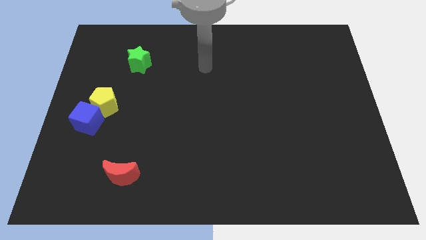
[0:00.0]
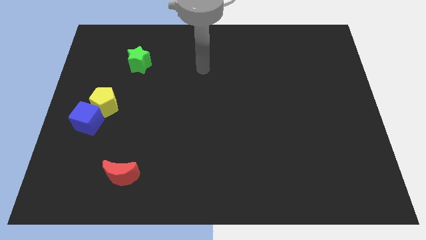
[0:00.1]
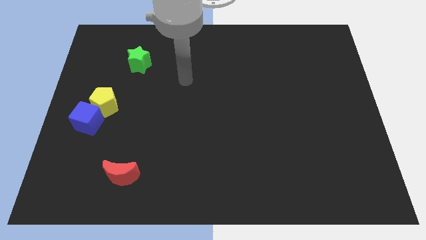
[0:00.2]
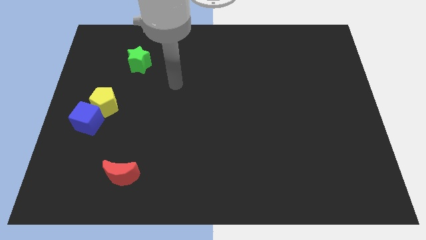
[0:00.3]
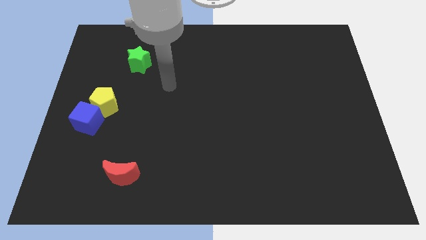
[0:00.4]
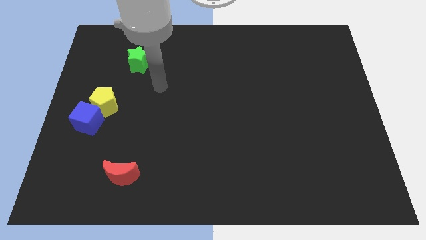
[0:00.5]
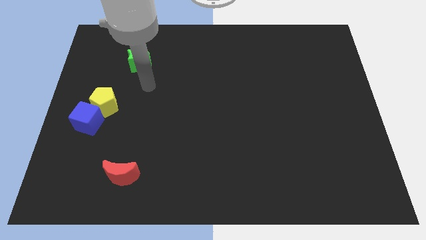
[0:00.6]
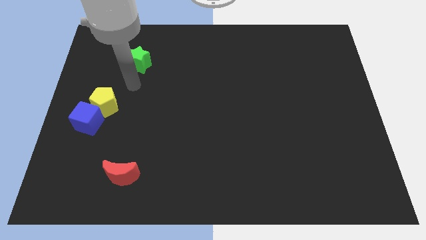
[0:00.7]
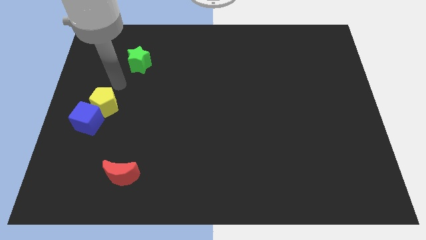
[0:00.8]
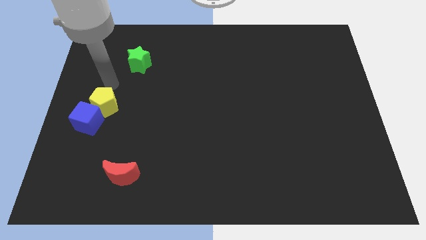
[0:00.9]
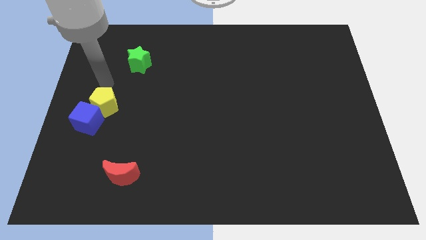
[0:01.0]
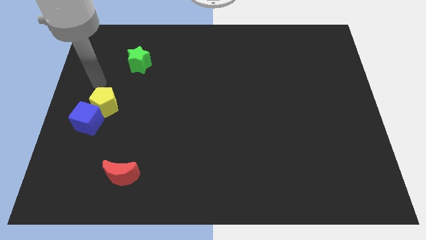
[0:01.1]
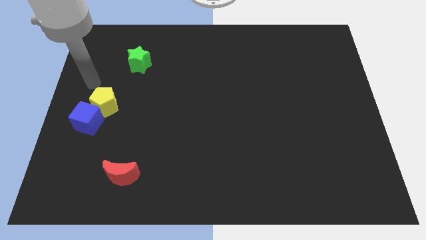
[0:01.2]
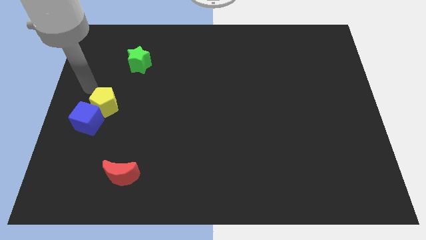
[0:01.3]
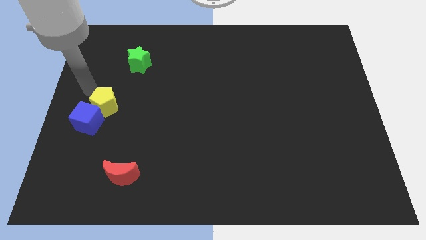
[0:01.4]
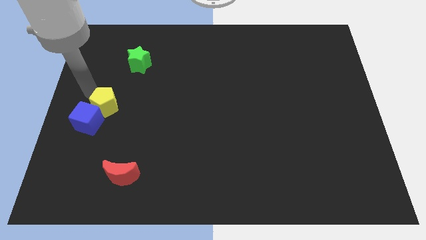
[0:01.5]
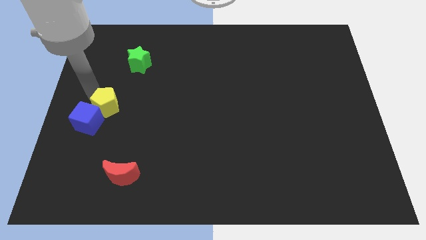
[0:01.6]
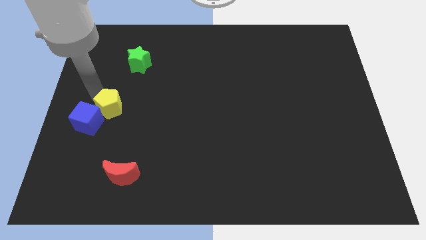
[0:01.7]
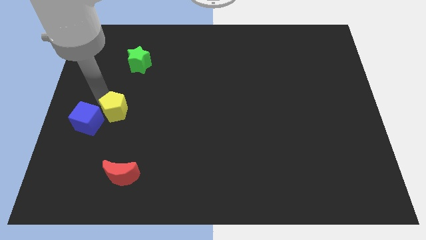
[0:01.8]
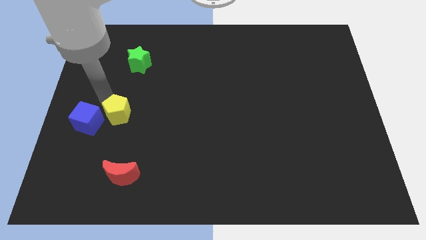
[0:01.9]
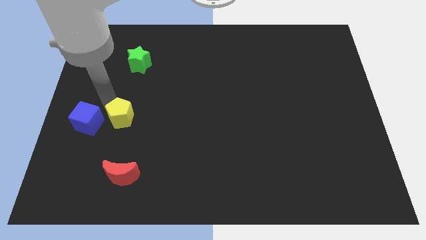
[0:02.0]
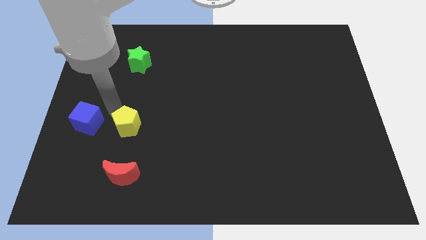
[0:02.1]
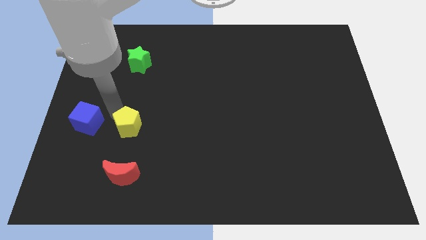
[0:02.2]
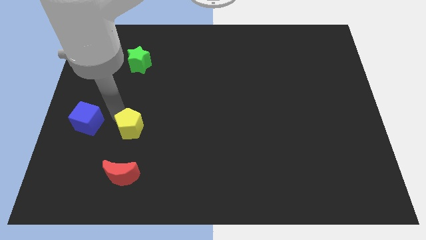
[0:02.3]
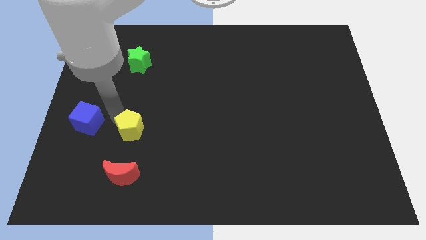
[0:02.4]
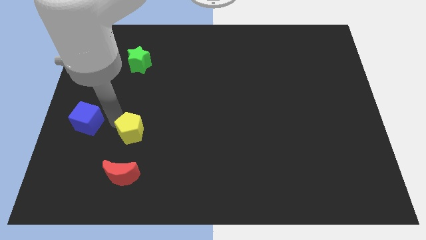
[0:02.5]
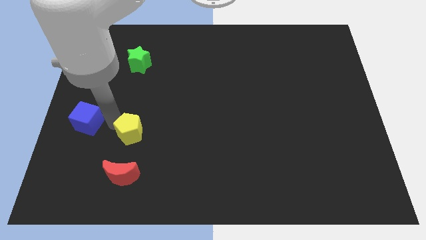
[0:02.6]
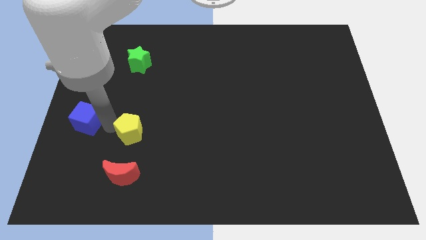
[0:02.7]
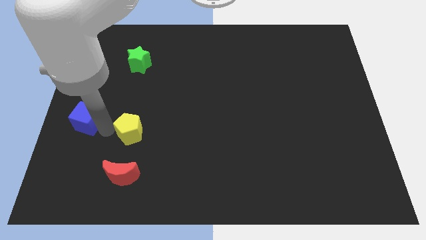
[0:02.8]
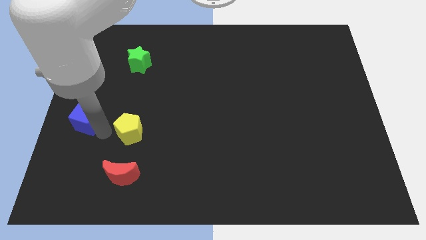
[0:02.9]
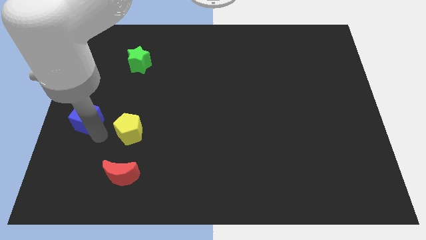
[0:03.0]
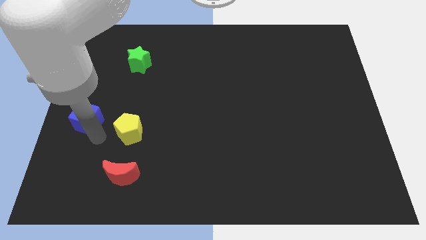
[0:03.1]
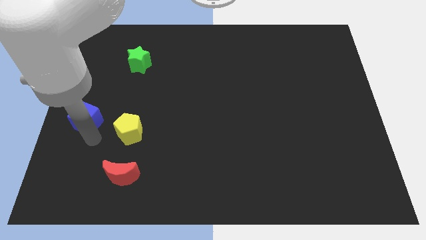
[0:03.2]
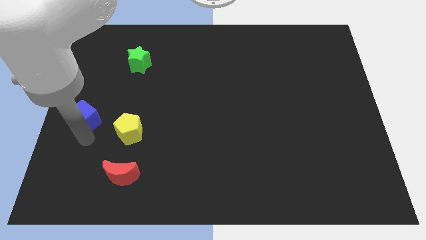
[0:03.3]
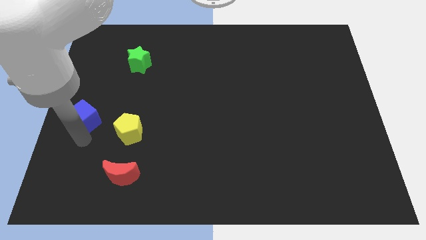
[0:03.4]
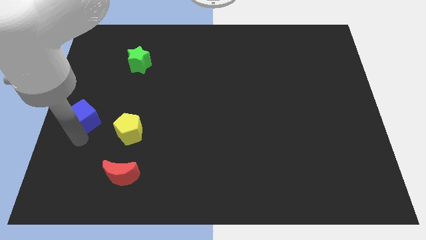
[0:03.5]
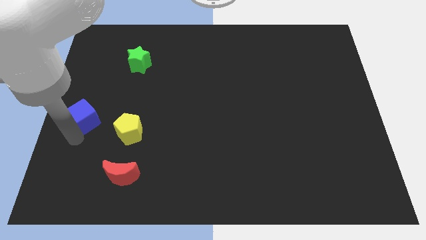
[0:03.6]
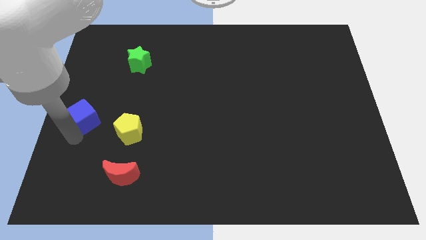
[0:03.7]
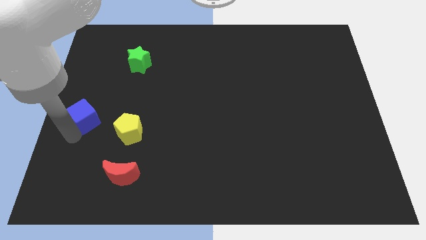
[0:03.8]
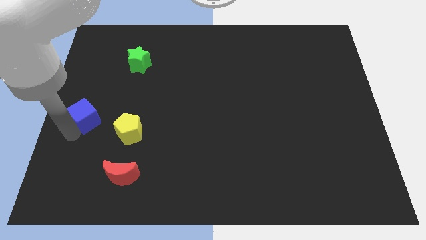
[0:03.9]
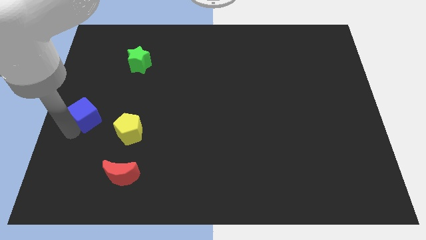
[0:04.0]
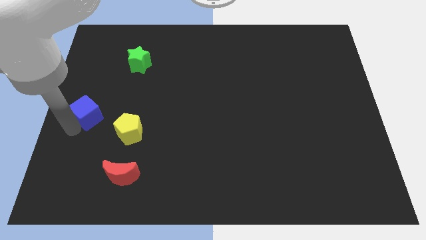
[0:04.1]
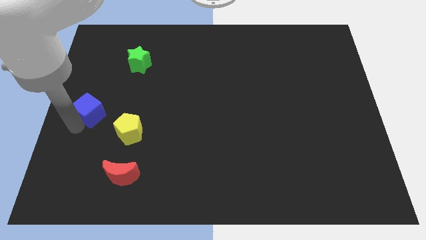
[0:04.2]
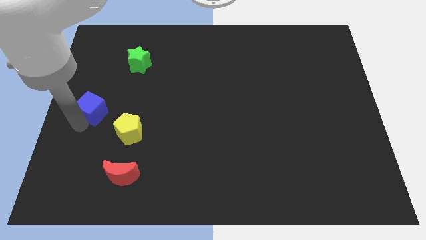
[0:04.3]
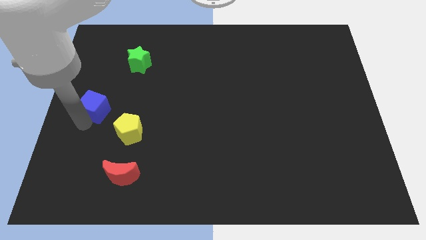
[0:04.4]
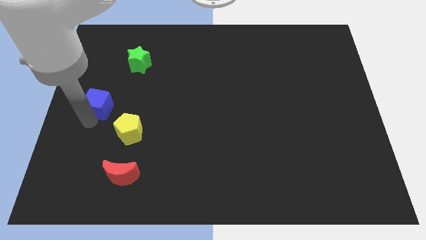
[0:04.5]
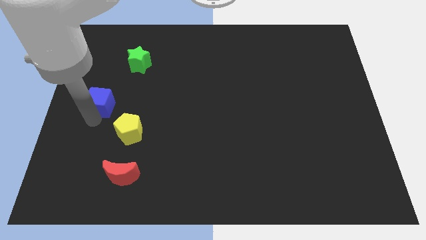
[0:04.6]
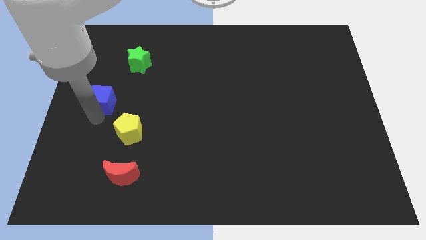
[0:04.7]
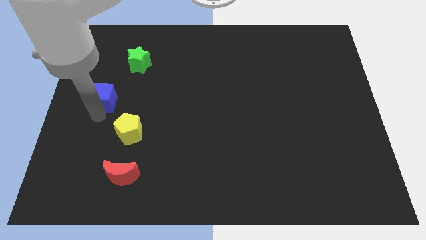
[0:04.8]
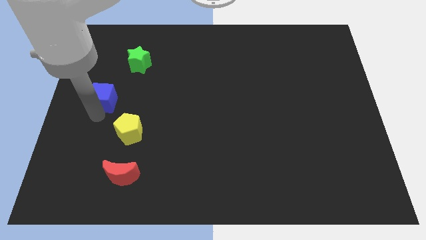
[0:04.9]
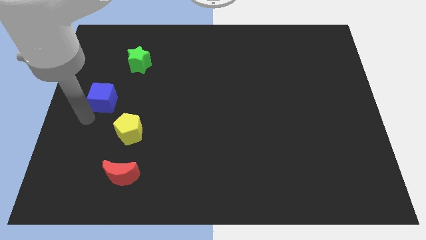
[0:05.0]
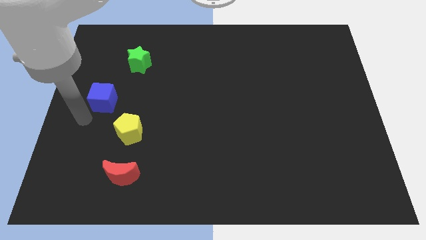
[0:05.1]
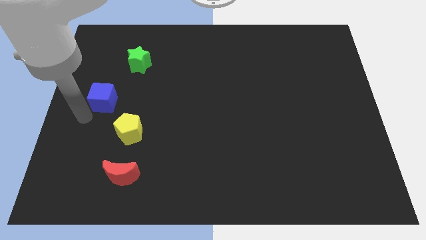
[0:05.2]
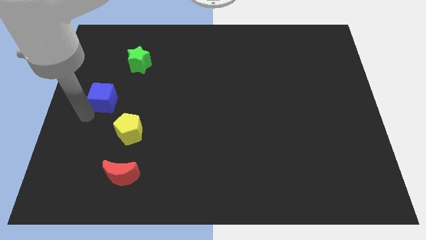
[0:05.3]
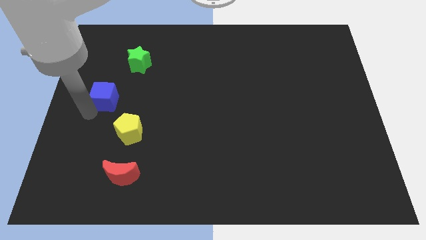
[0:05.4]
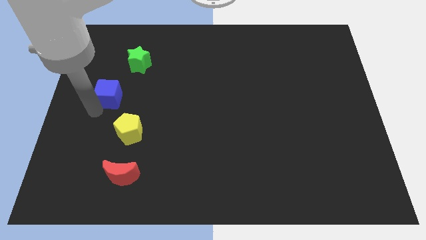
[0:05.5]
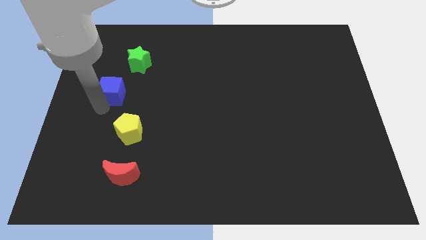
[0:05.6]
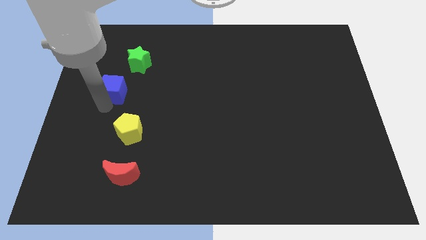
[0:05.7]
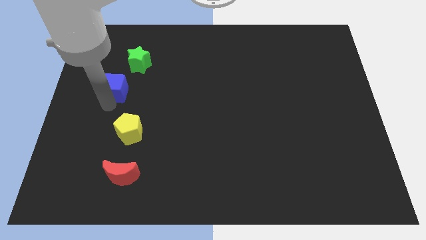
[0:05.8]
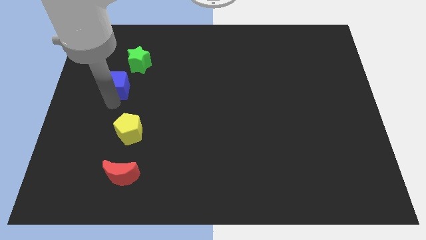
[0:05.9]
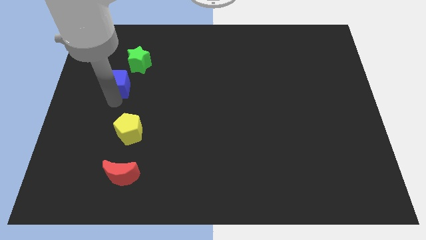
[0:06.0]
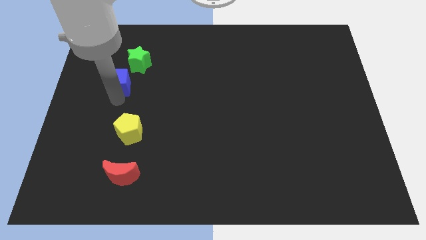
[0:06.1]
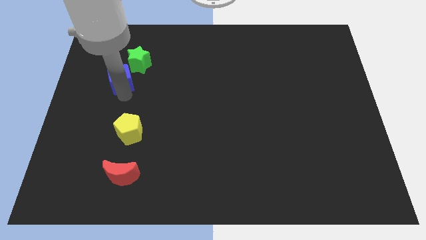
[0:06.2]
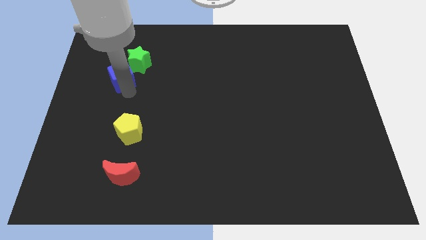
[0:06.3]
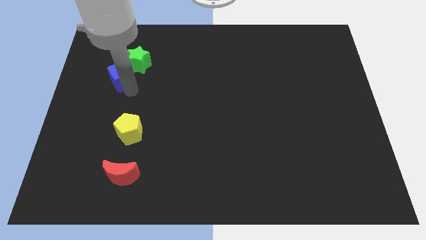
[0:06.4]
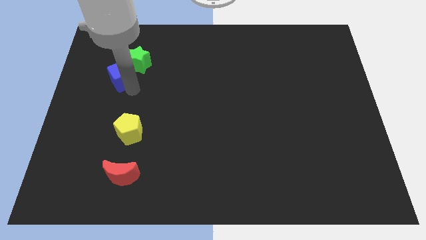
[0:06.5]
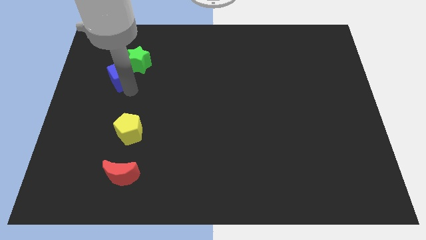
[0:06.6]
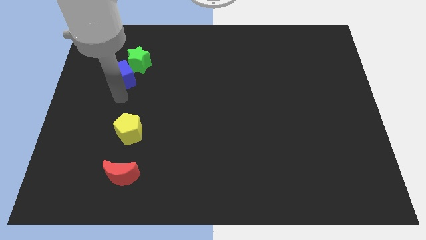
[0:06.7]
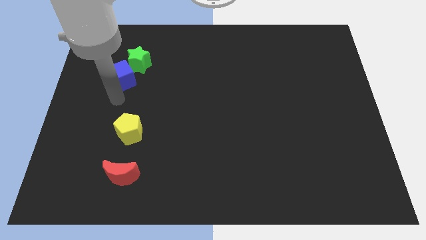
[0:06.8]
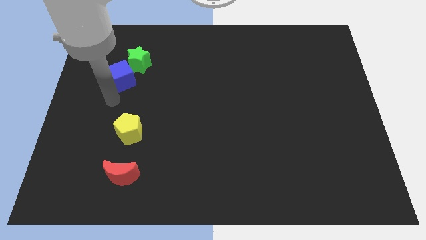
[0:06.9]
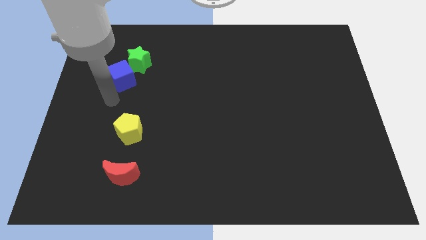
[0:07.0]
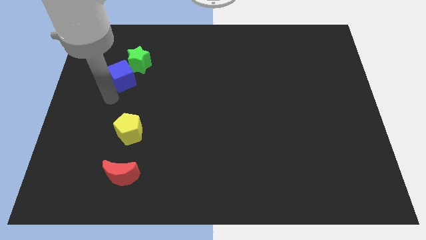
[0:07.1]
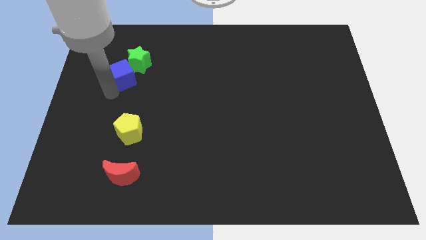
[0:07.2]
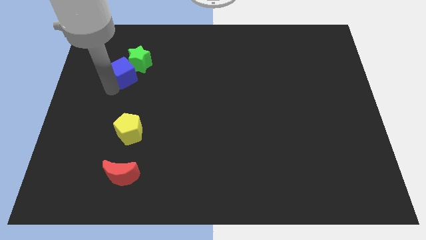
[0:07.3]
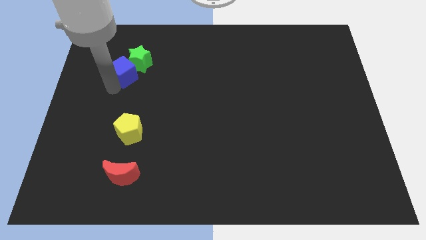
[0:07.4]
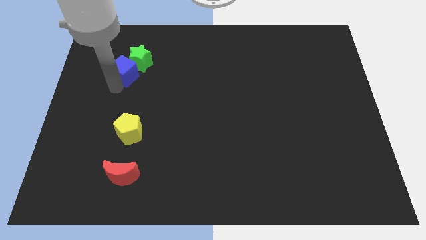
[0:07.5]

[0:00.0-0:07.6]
slide the cube to the green block

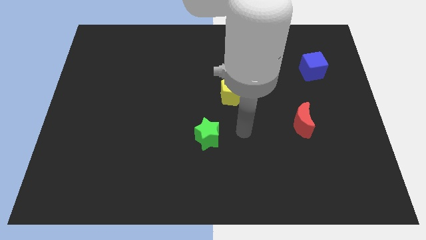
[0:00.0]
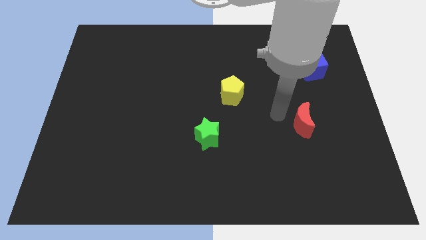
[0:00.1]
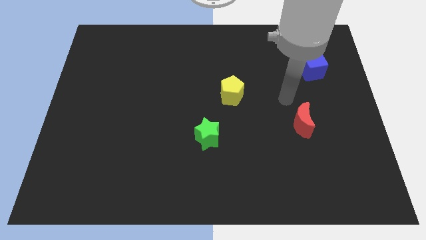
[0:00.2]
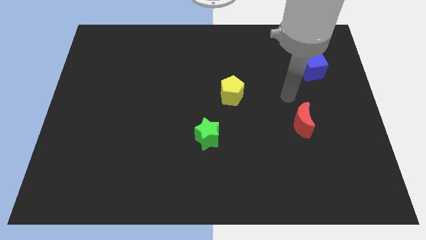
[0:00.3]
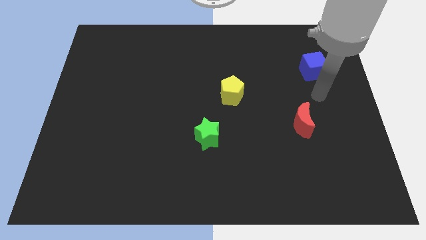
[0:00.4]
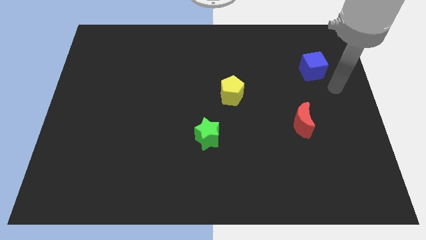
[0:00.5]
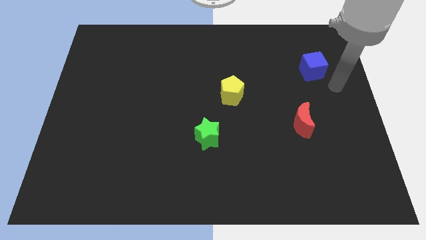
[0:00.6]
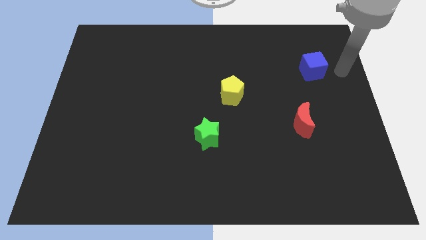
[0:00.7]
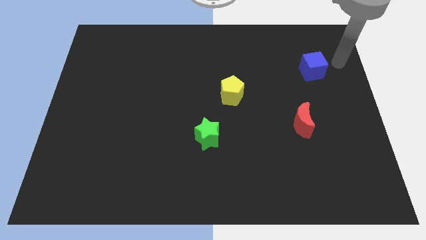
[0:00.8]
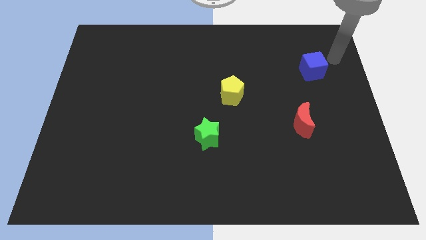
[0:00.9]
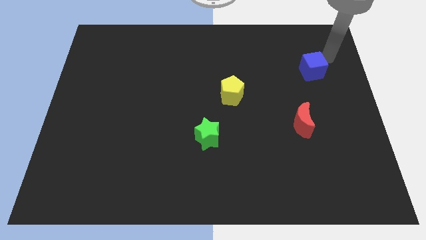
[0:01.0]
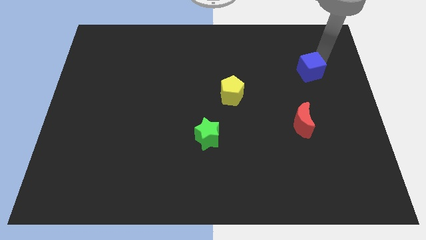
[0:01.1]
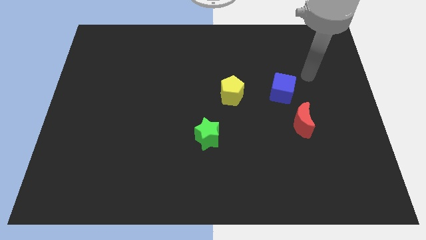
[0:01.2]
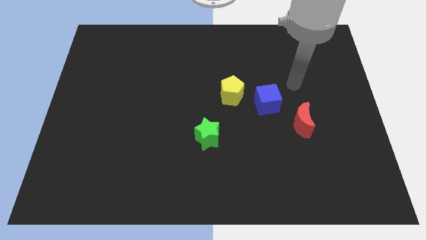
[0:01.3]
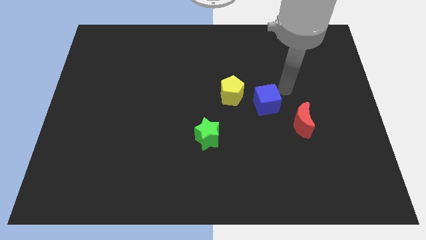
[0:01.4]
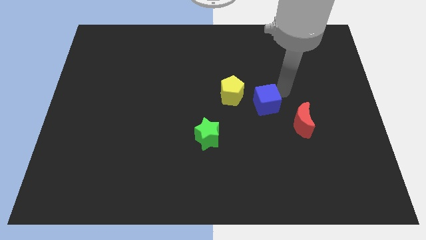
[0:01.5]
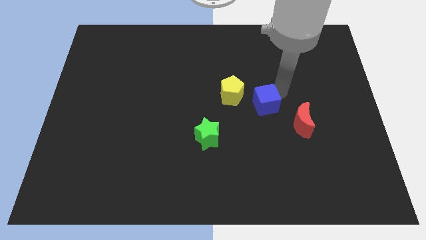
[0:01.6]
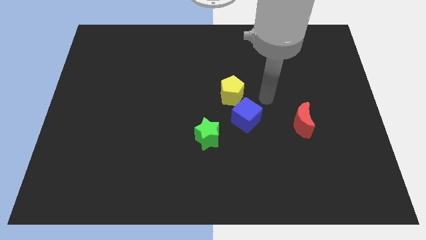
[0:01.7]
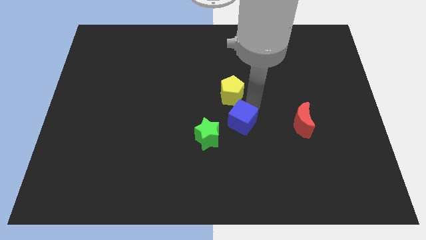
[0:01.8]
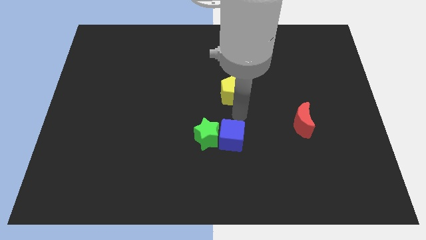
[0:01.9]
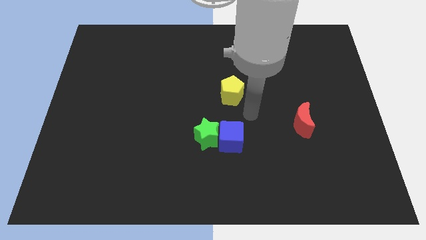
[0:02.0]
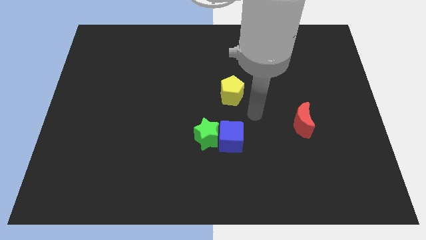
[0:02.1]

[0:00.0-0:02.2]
slide the blue block towards the green star
